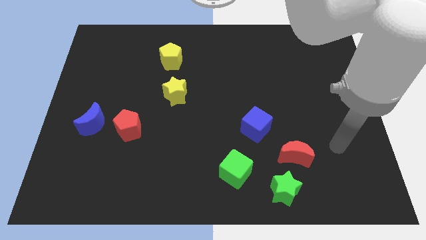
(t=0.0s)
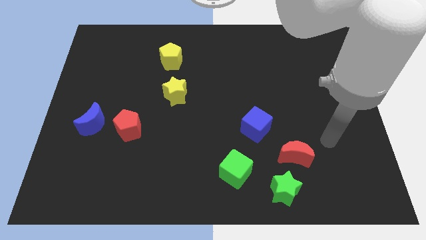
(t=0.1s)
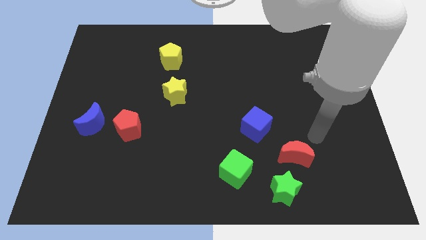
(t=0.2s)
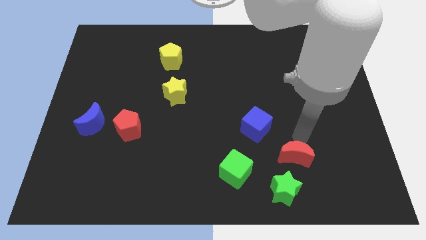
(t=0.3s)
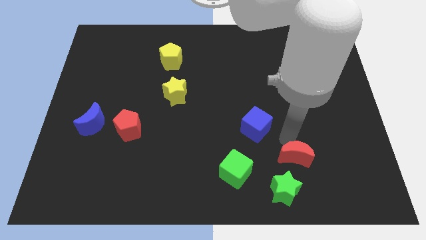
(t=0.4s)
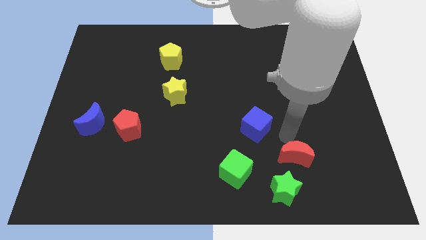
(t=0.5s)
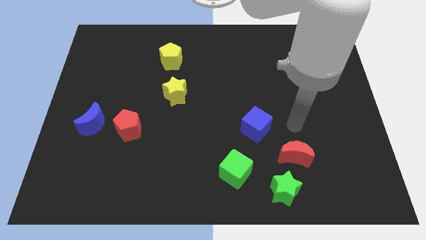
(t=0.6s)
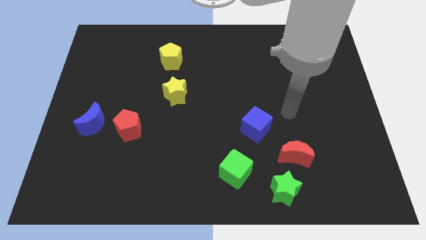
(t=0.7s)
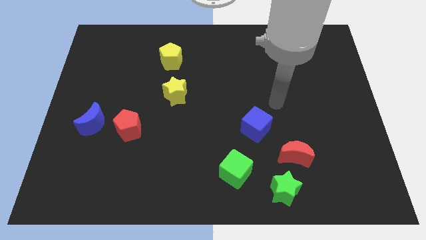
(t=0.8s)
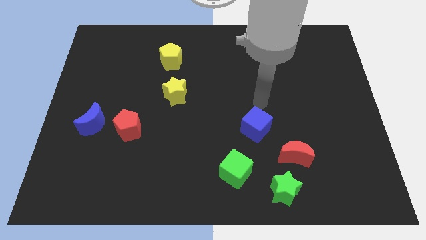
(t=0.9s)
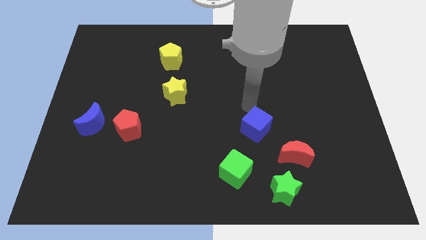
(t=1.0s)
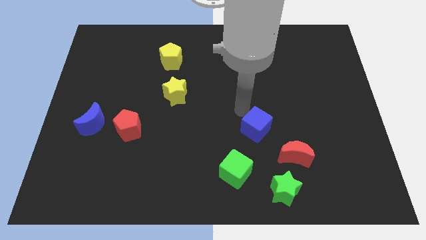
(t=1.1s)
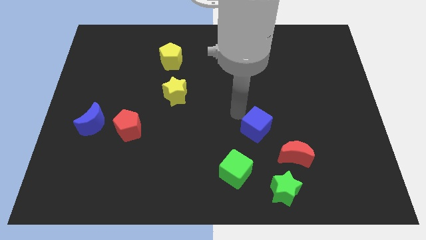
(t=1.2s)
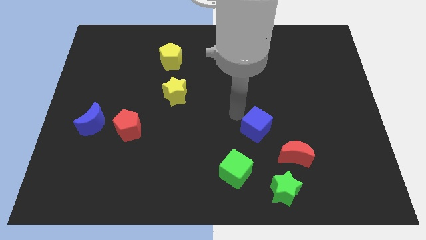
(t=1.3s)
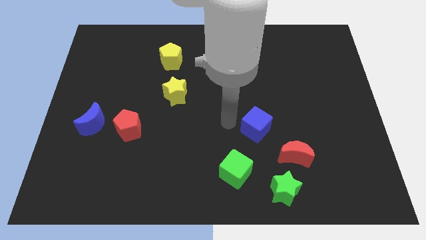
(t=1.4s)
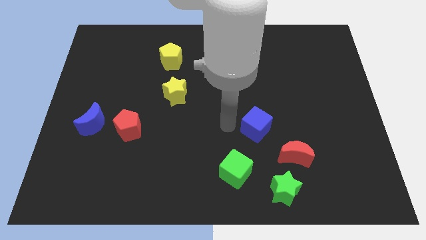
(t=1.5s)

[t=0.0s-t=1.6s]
move the arm to the left of the blue cube

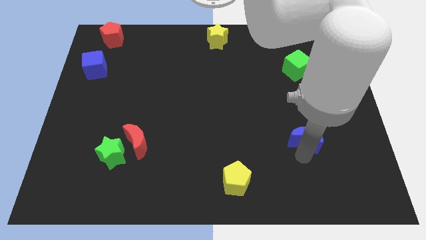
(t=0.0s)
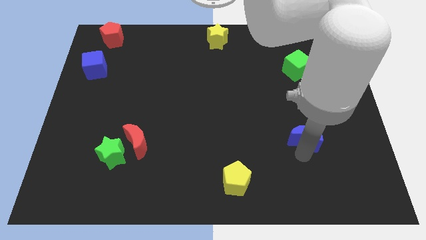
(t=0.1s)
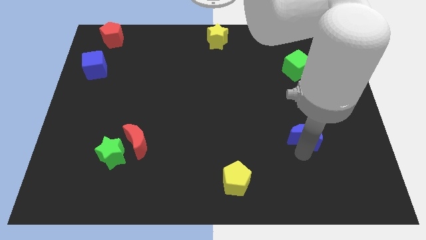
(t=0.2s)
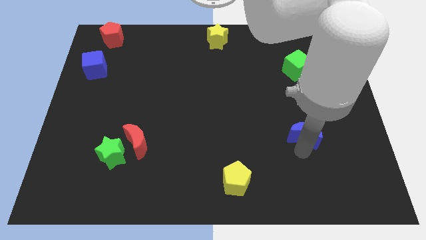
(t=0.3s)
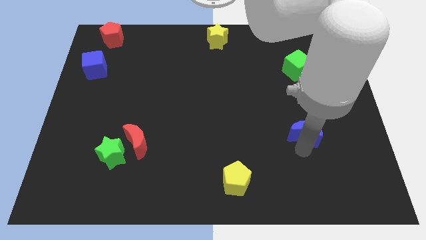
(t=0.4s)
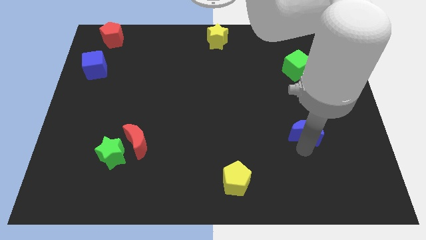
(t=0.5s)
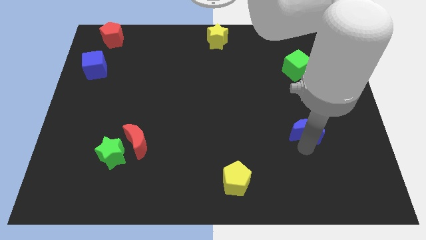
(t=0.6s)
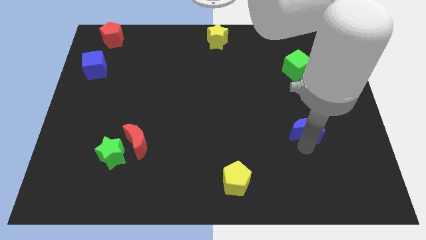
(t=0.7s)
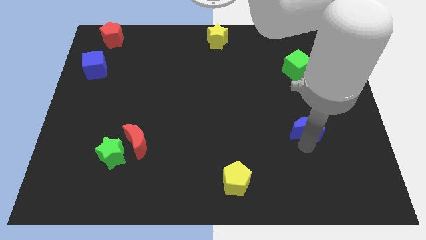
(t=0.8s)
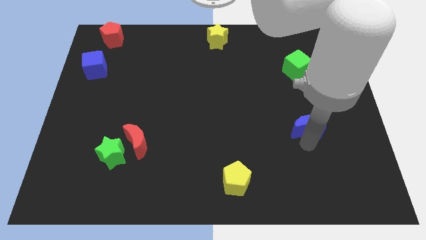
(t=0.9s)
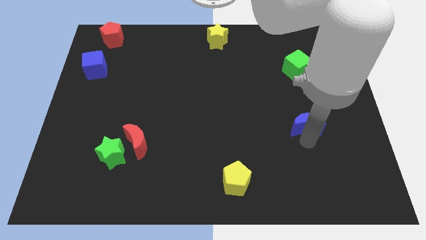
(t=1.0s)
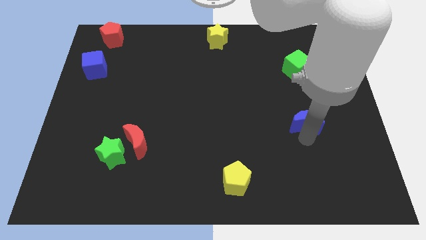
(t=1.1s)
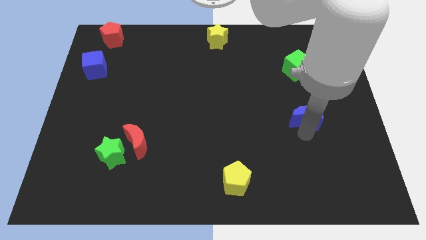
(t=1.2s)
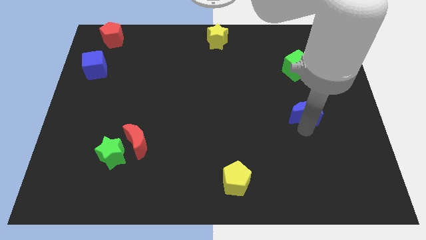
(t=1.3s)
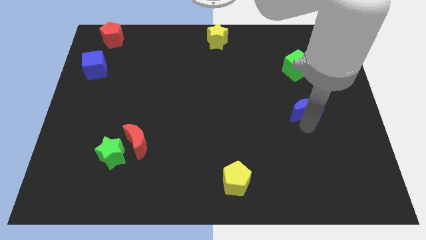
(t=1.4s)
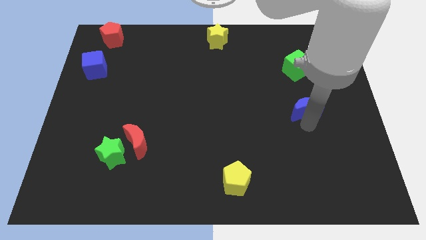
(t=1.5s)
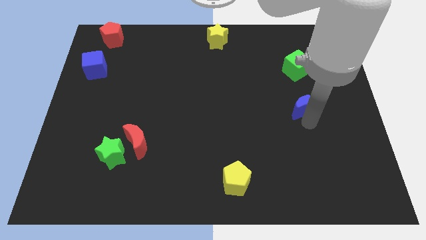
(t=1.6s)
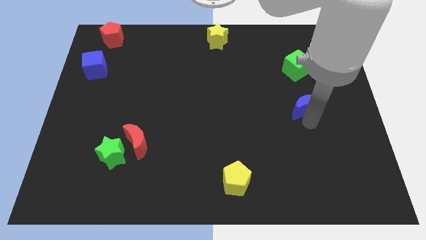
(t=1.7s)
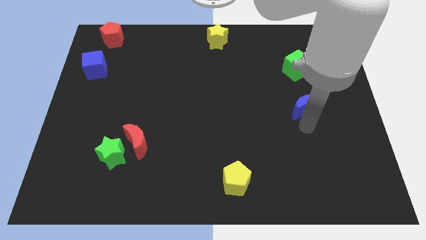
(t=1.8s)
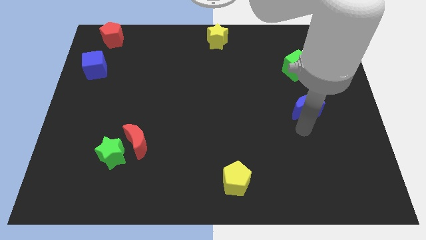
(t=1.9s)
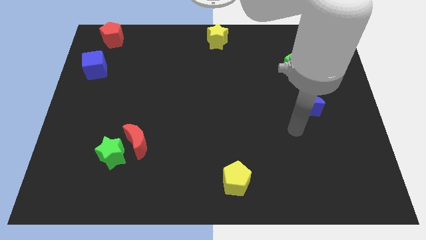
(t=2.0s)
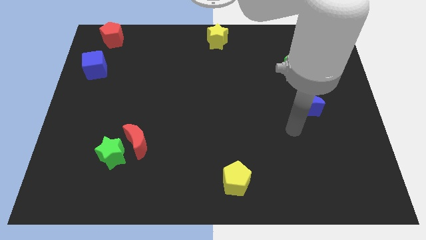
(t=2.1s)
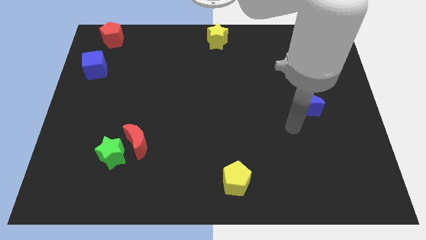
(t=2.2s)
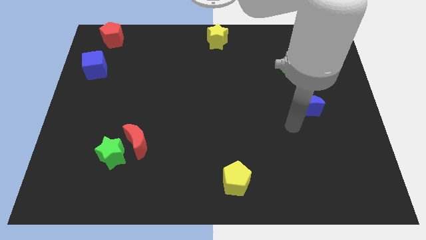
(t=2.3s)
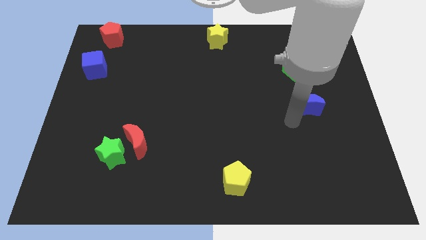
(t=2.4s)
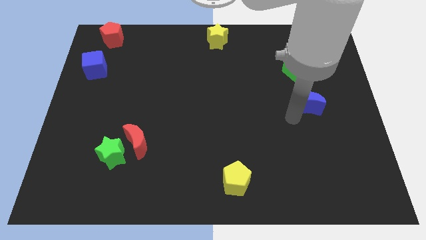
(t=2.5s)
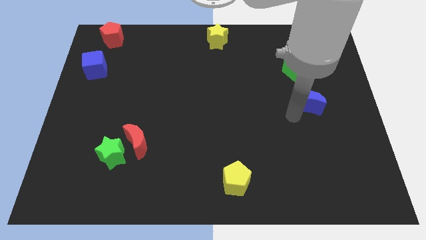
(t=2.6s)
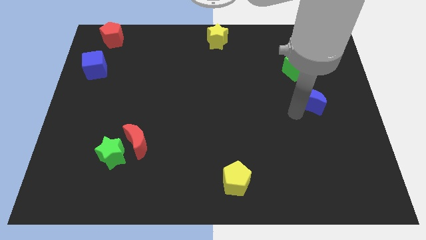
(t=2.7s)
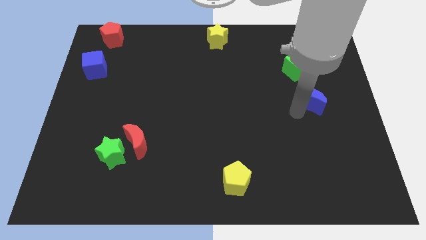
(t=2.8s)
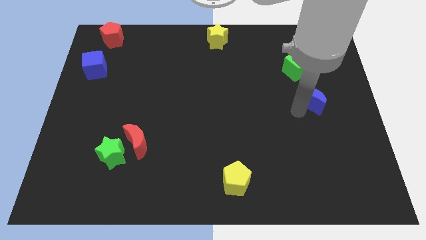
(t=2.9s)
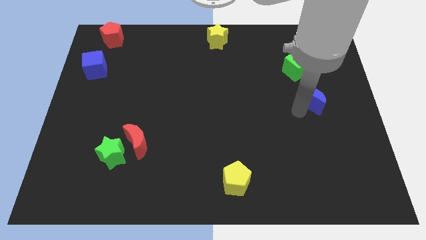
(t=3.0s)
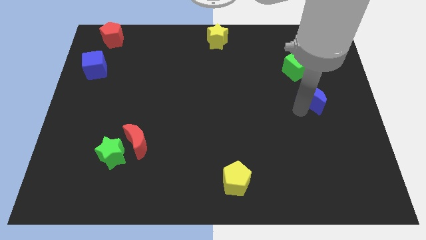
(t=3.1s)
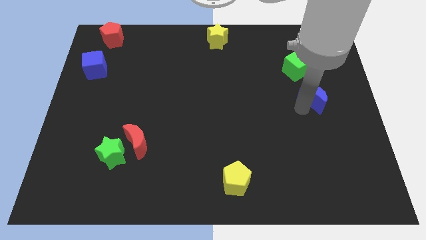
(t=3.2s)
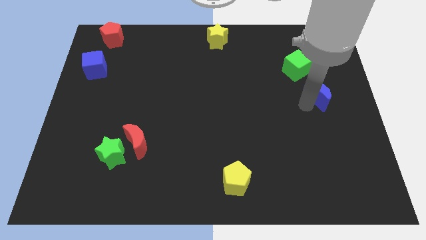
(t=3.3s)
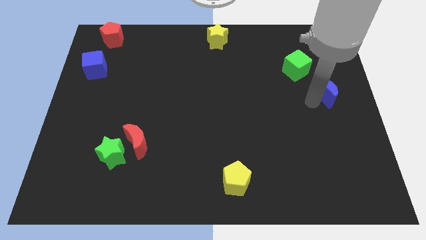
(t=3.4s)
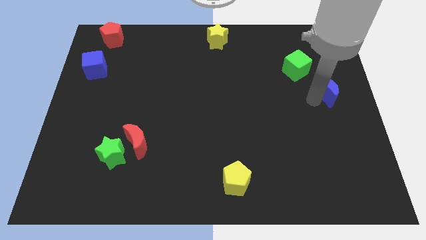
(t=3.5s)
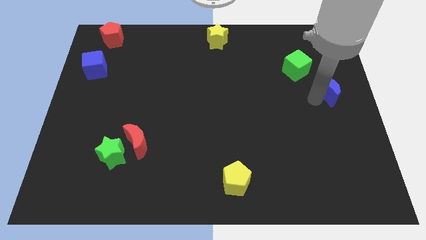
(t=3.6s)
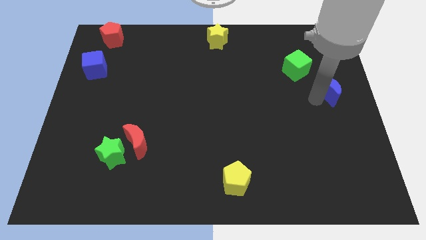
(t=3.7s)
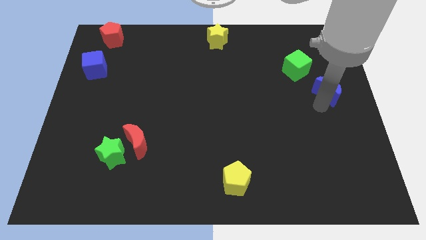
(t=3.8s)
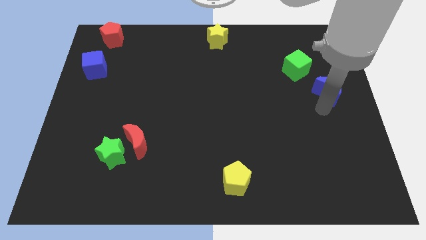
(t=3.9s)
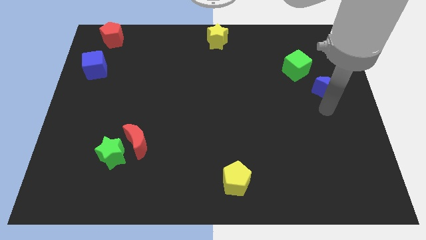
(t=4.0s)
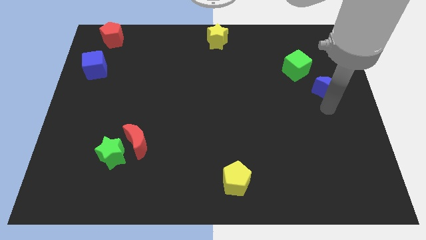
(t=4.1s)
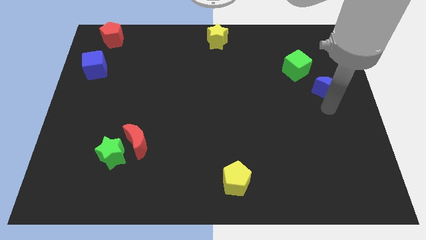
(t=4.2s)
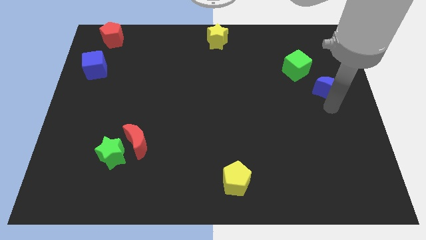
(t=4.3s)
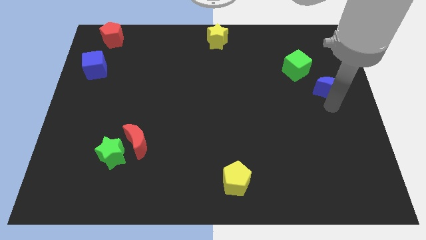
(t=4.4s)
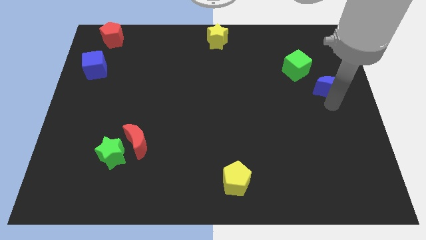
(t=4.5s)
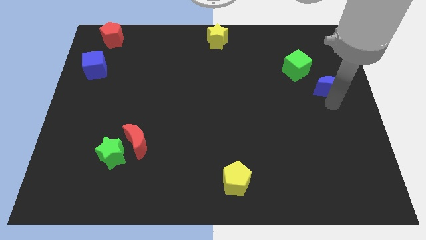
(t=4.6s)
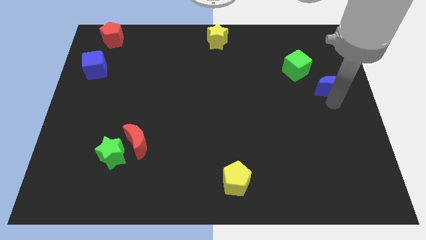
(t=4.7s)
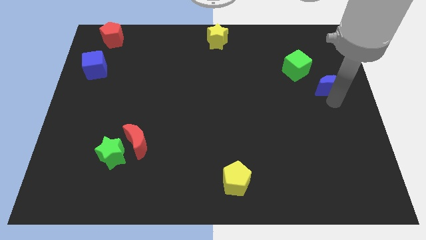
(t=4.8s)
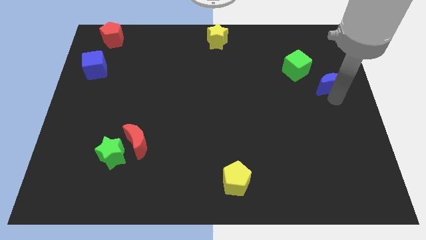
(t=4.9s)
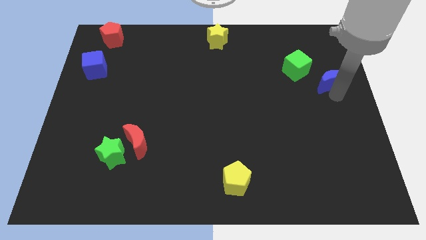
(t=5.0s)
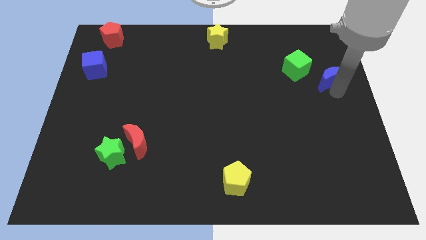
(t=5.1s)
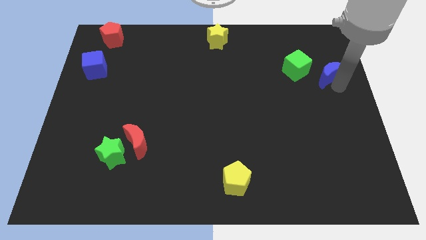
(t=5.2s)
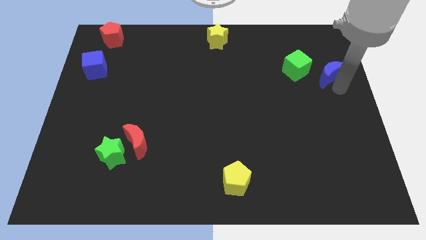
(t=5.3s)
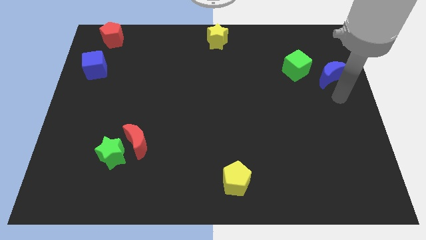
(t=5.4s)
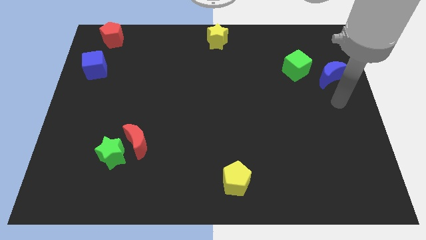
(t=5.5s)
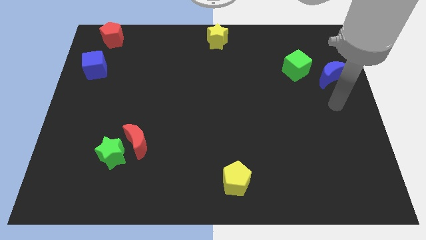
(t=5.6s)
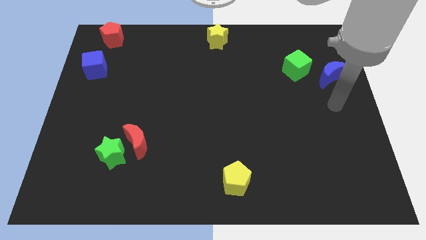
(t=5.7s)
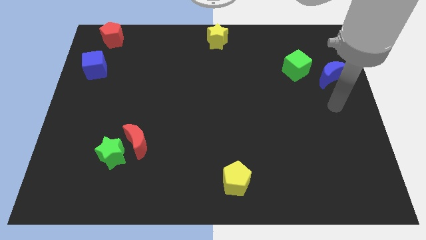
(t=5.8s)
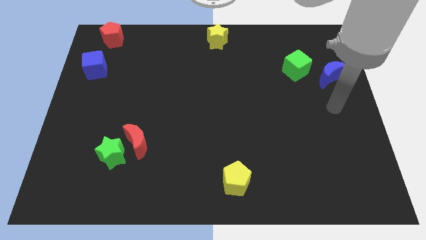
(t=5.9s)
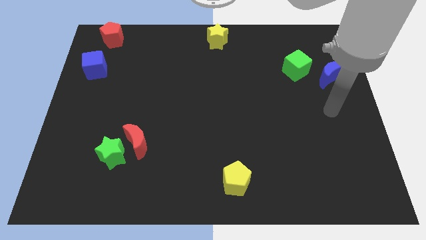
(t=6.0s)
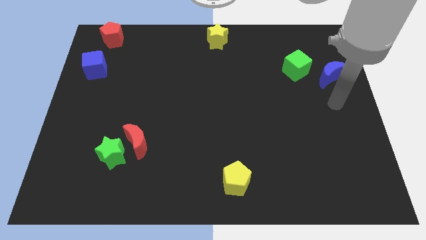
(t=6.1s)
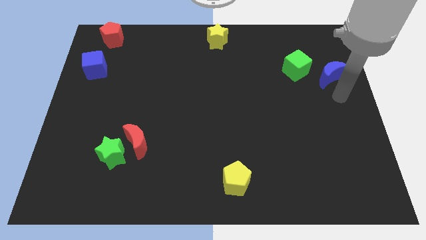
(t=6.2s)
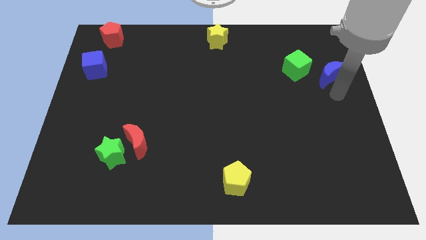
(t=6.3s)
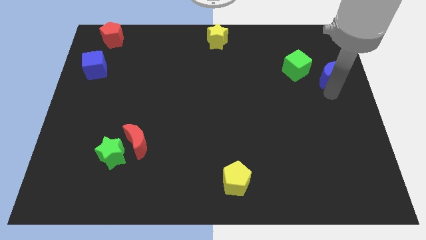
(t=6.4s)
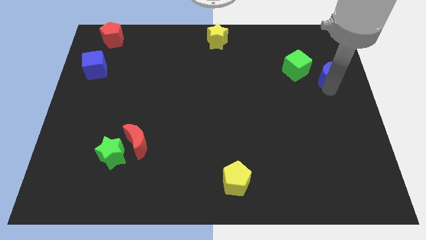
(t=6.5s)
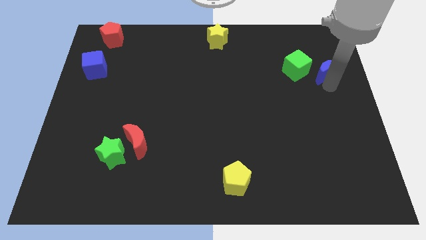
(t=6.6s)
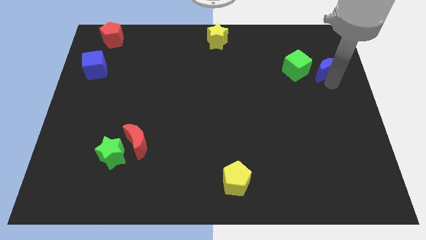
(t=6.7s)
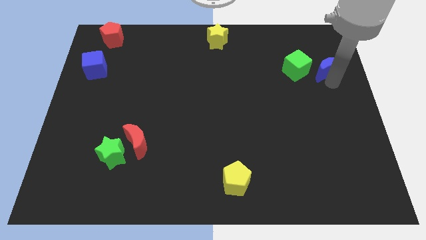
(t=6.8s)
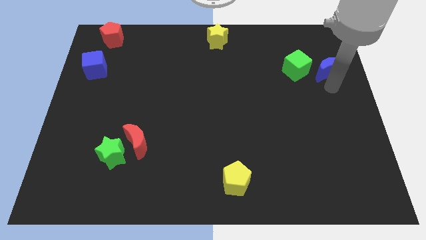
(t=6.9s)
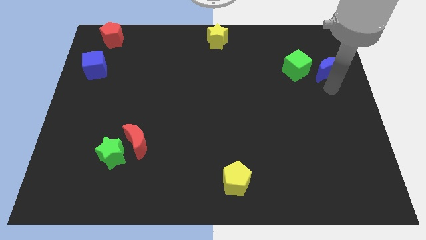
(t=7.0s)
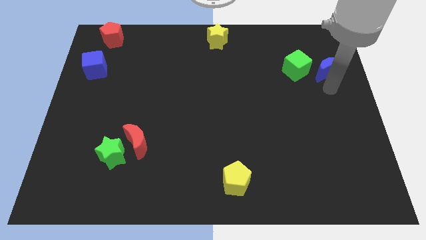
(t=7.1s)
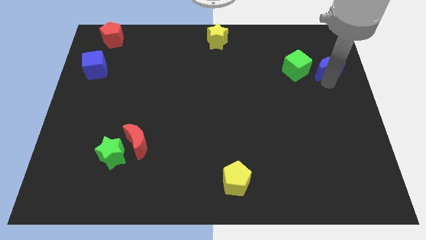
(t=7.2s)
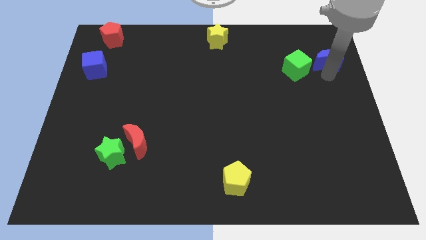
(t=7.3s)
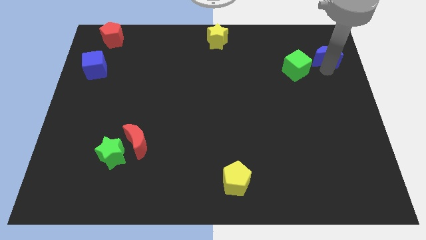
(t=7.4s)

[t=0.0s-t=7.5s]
place blue moon right to green cube
